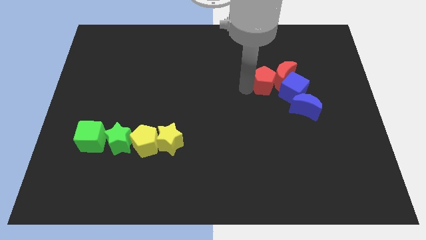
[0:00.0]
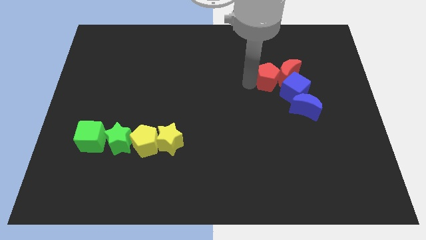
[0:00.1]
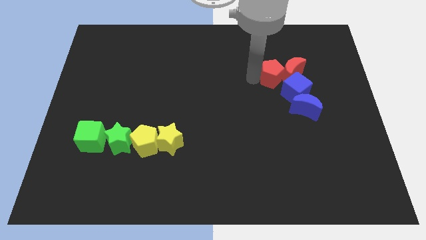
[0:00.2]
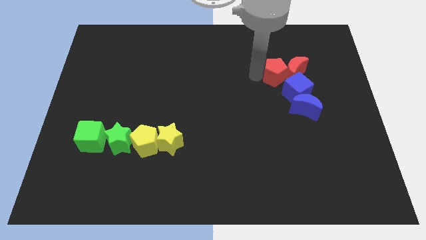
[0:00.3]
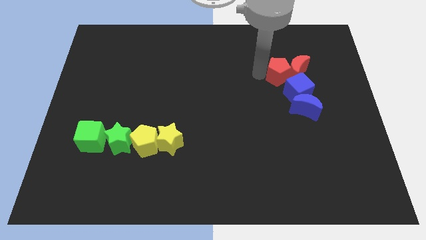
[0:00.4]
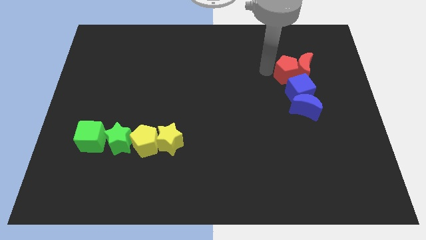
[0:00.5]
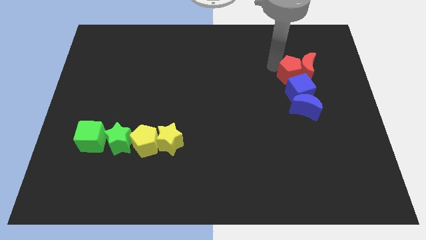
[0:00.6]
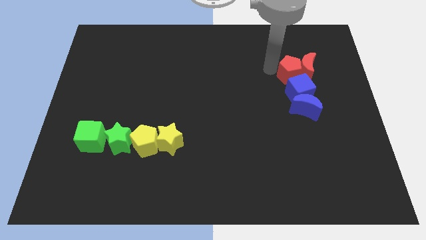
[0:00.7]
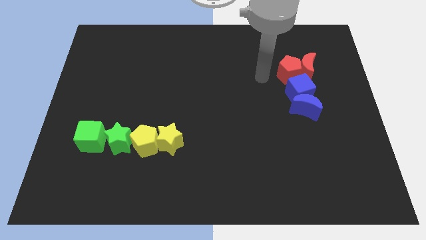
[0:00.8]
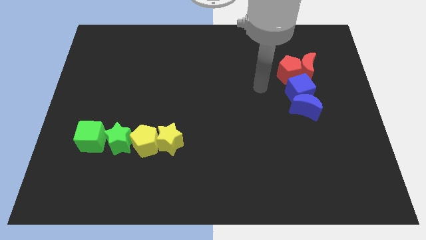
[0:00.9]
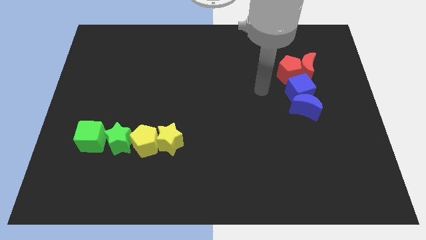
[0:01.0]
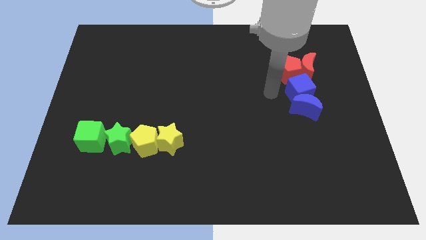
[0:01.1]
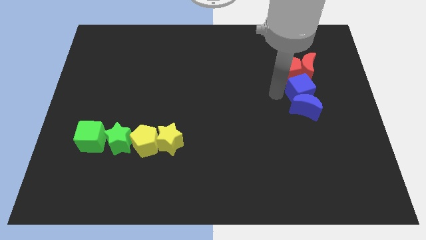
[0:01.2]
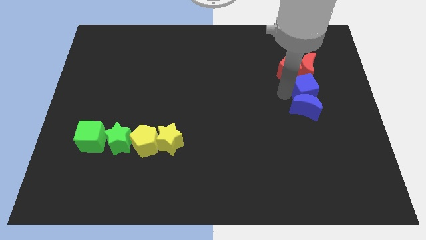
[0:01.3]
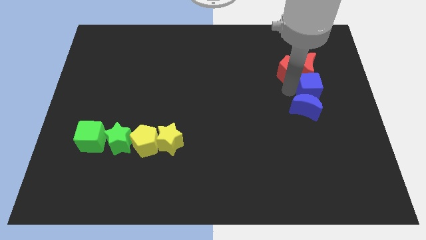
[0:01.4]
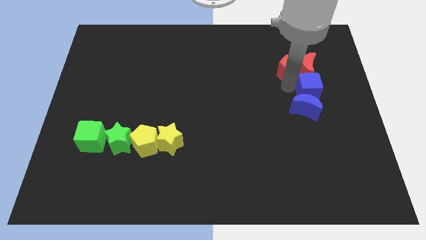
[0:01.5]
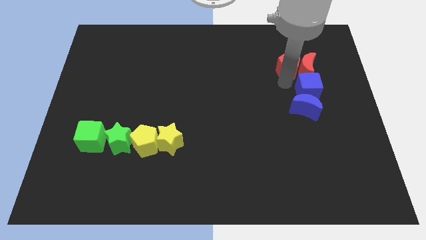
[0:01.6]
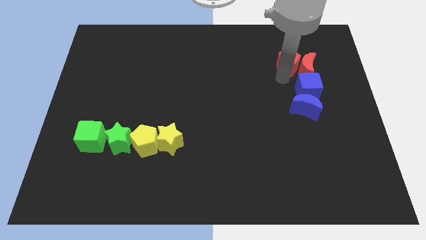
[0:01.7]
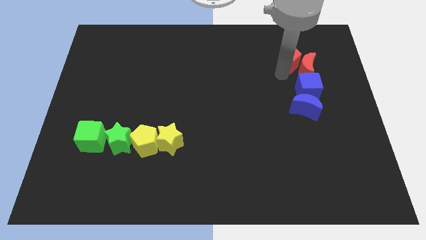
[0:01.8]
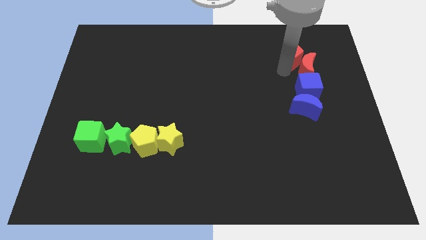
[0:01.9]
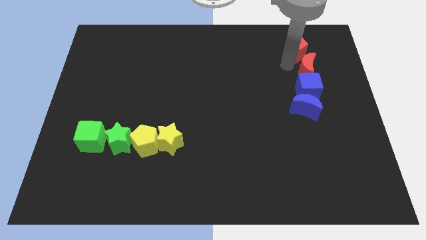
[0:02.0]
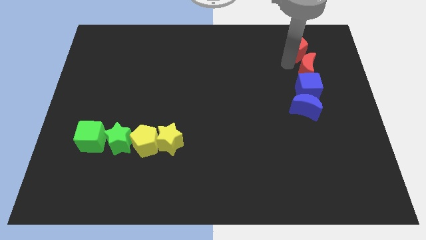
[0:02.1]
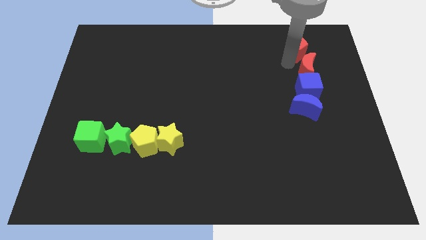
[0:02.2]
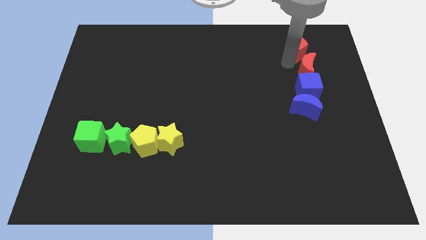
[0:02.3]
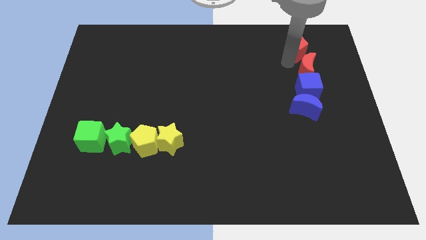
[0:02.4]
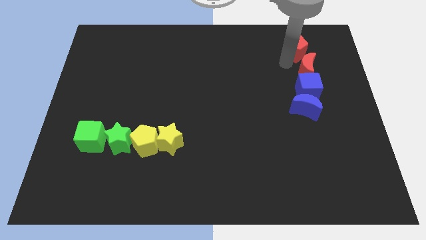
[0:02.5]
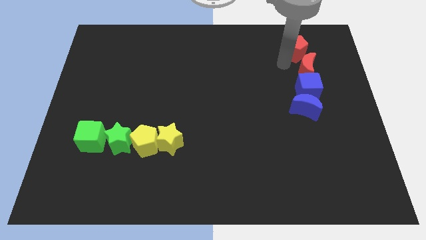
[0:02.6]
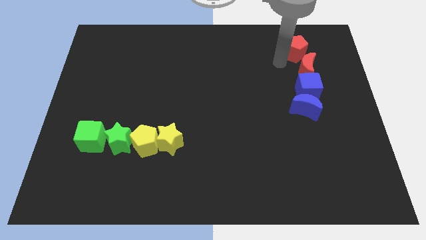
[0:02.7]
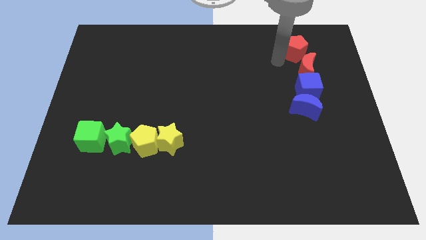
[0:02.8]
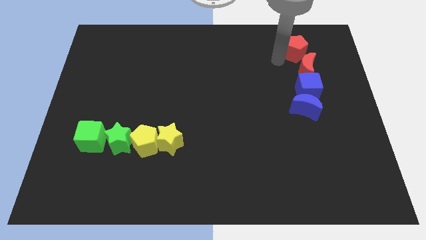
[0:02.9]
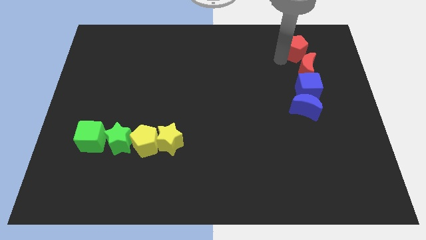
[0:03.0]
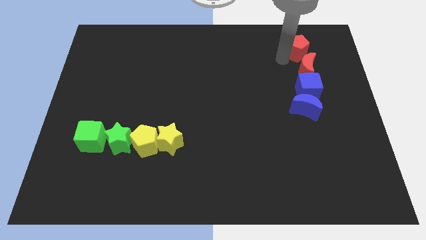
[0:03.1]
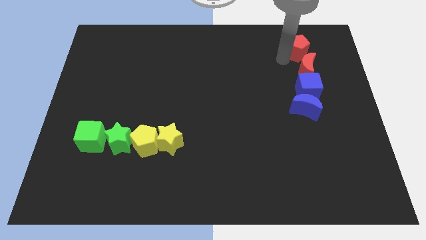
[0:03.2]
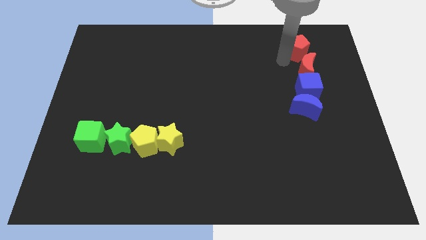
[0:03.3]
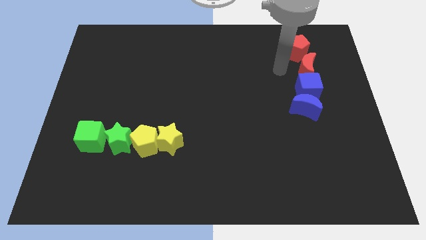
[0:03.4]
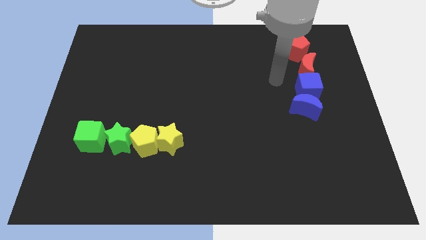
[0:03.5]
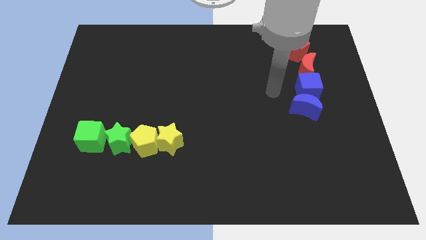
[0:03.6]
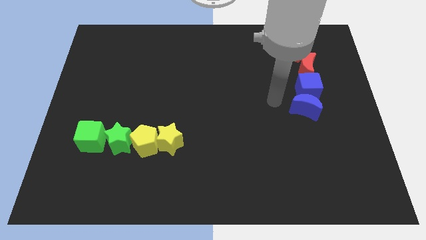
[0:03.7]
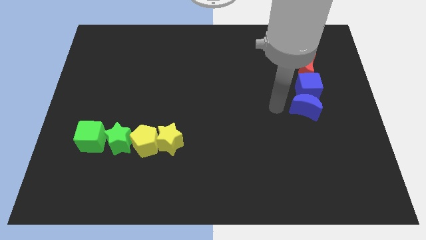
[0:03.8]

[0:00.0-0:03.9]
place the red pentagon on top of the red crescent

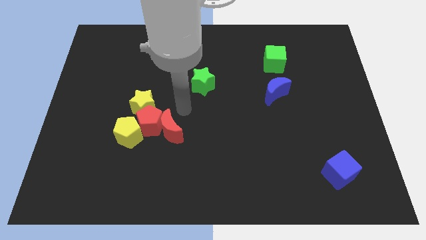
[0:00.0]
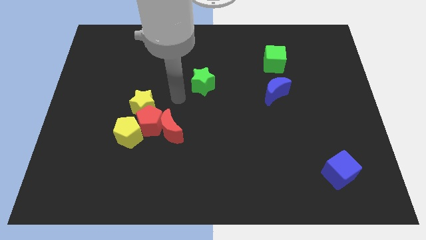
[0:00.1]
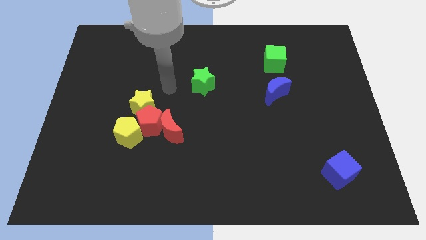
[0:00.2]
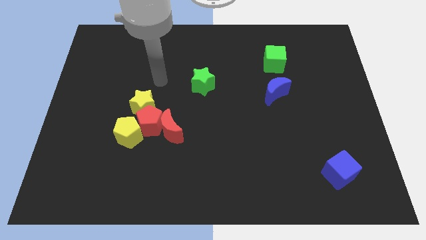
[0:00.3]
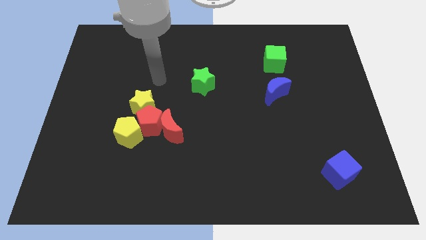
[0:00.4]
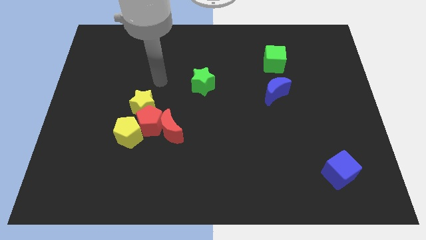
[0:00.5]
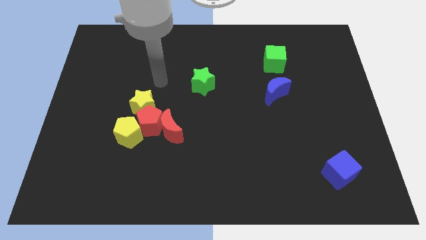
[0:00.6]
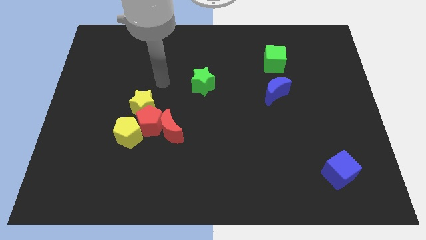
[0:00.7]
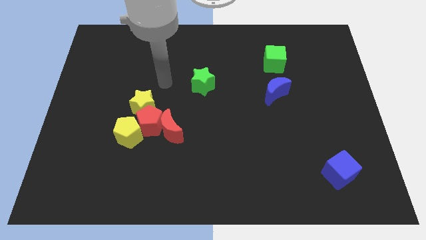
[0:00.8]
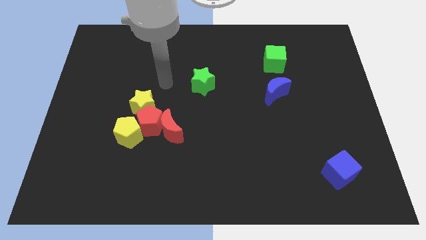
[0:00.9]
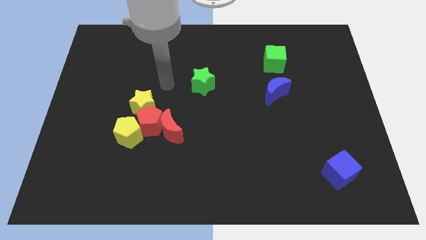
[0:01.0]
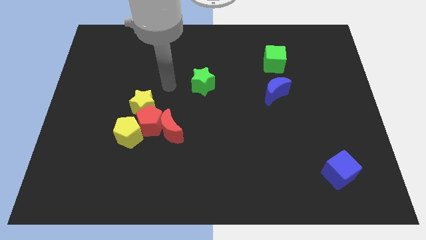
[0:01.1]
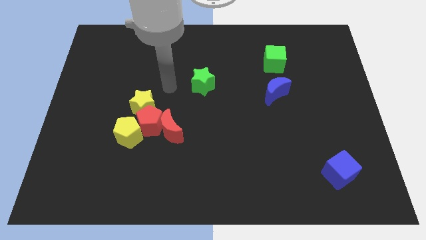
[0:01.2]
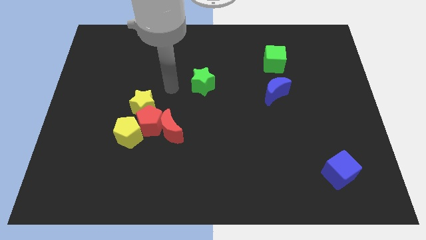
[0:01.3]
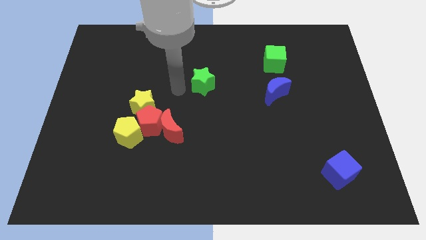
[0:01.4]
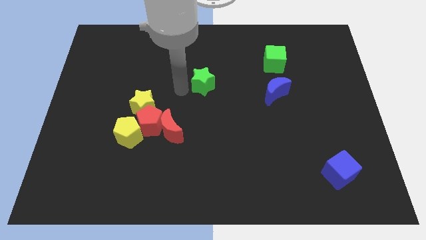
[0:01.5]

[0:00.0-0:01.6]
place your arm to the left of green star

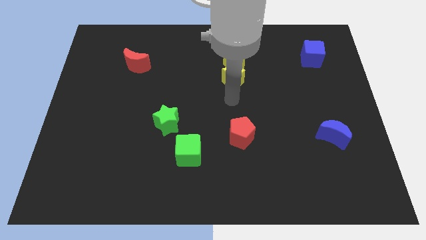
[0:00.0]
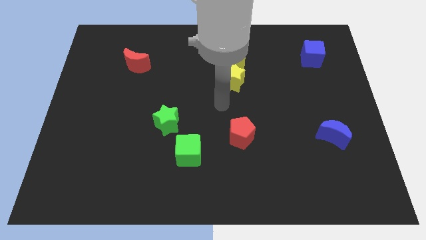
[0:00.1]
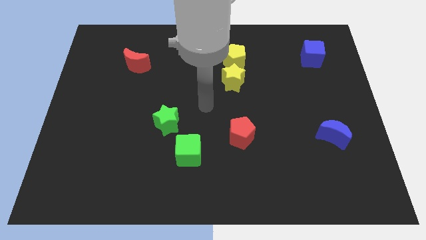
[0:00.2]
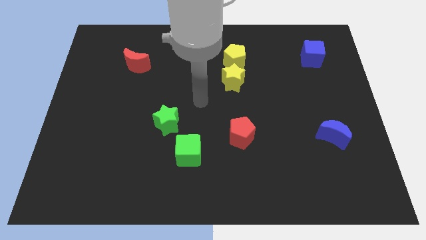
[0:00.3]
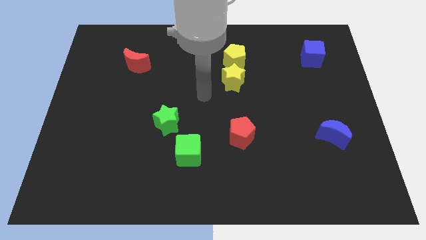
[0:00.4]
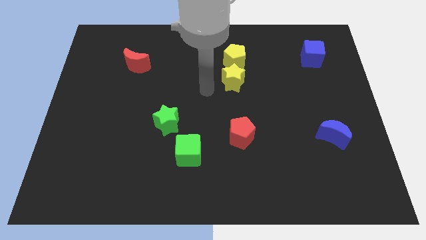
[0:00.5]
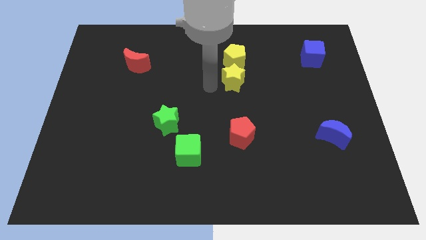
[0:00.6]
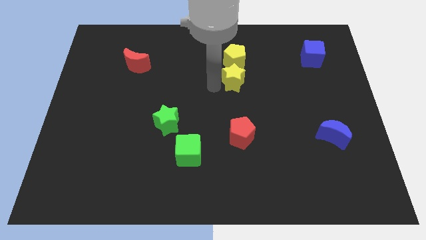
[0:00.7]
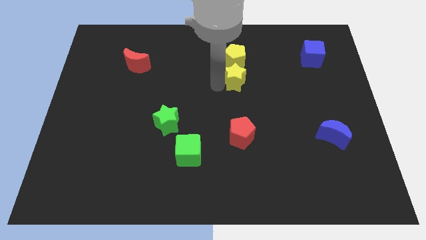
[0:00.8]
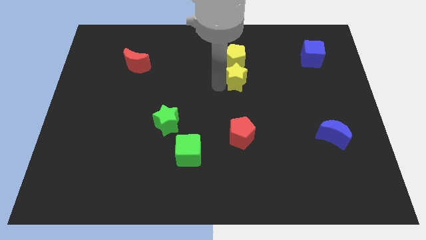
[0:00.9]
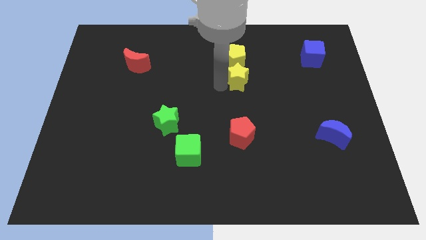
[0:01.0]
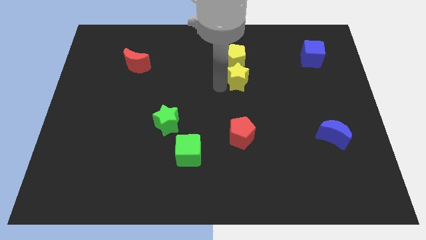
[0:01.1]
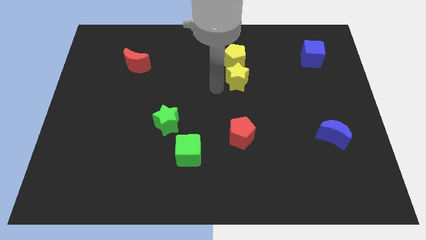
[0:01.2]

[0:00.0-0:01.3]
move yellow star near yellow pentagon

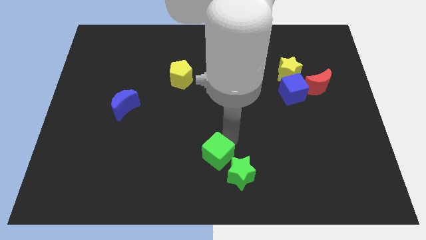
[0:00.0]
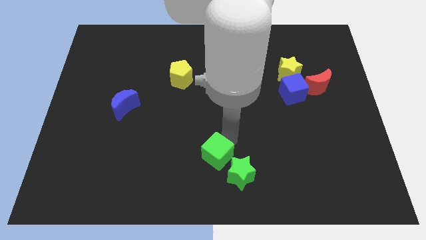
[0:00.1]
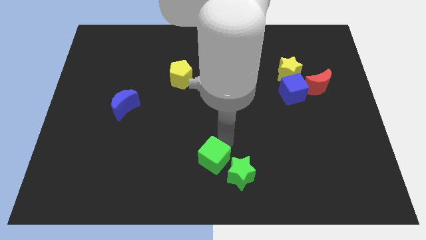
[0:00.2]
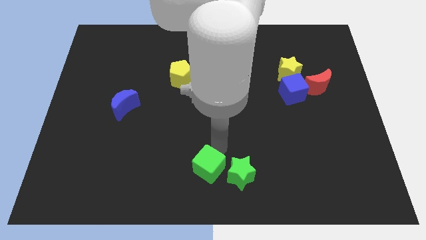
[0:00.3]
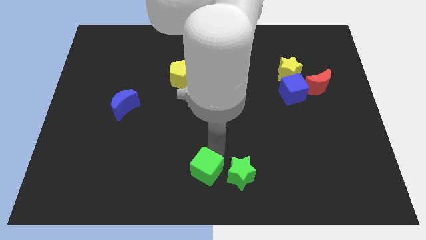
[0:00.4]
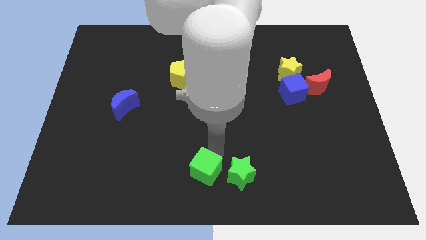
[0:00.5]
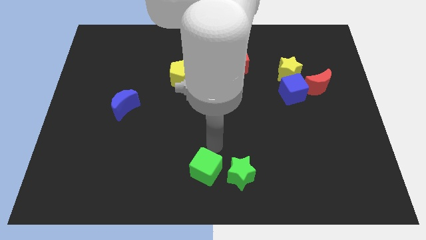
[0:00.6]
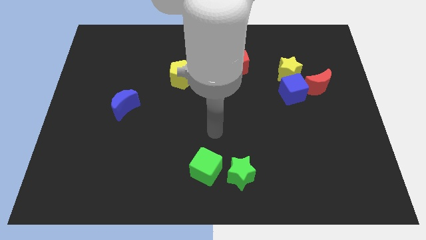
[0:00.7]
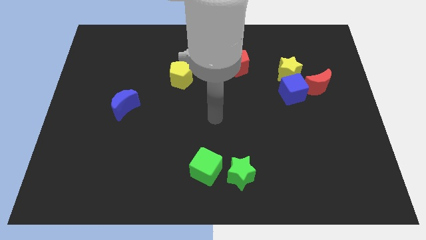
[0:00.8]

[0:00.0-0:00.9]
place the green cube at left side of the green star

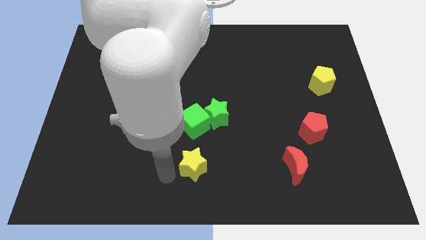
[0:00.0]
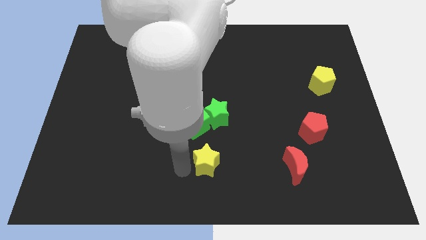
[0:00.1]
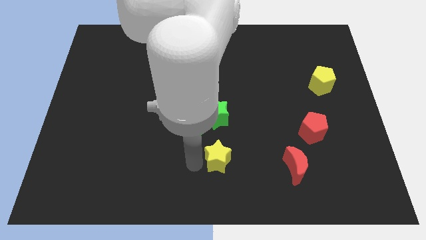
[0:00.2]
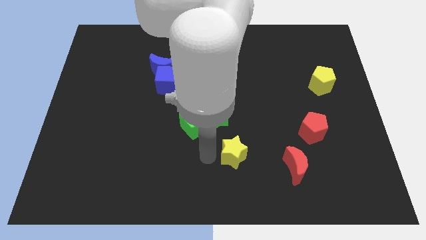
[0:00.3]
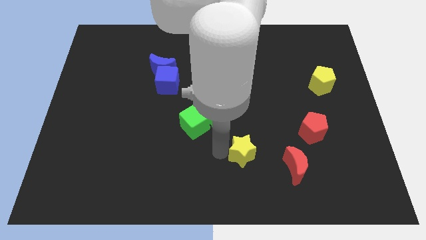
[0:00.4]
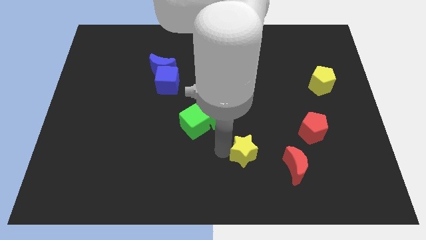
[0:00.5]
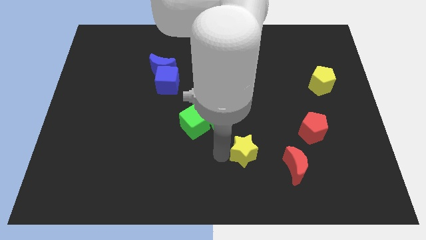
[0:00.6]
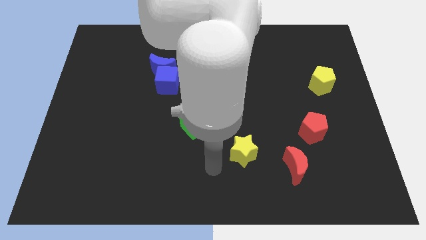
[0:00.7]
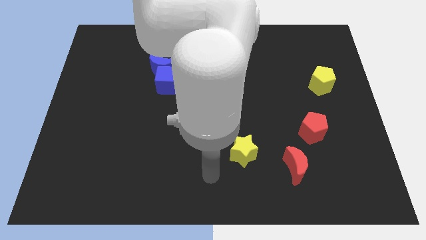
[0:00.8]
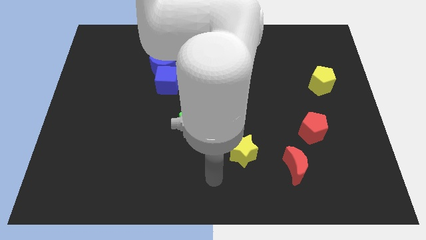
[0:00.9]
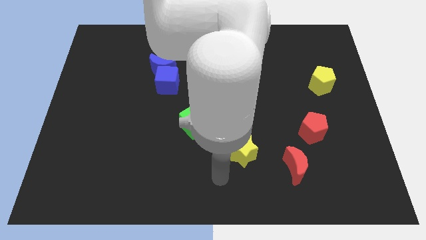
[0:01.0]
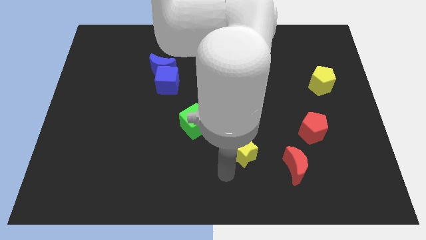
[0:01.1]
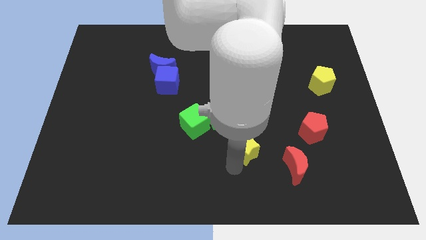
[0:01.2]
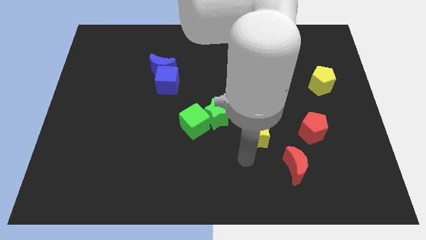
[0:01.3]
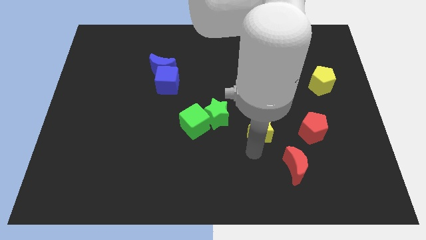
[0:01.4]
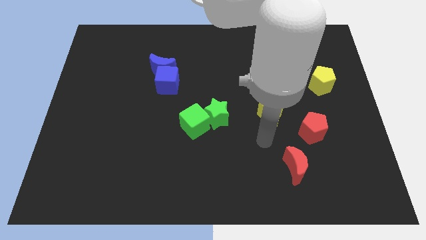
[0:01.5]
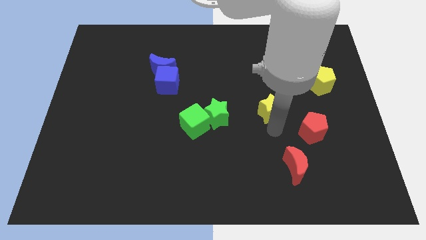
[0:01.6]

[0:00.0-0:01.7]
move the yellow star to the top center right
